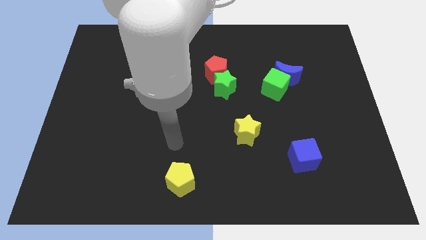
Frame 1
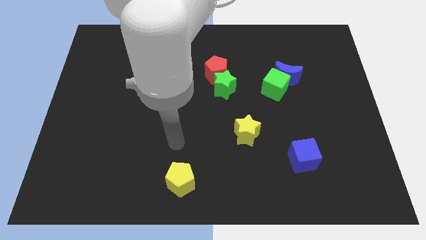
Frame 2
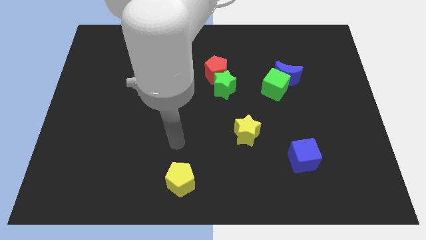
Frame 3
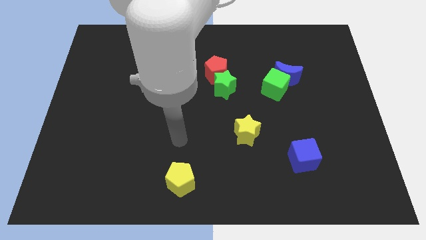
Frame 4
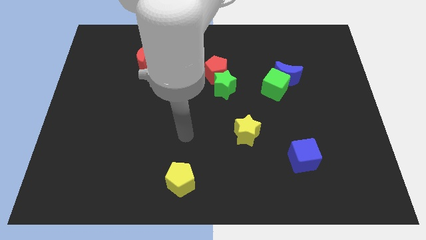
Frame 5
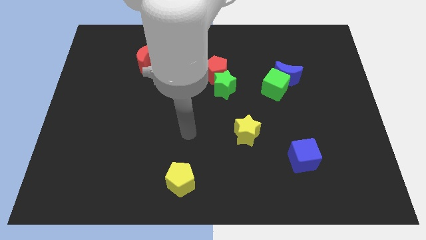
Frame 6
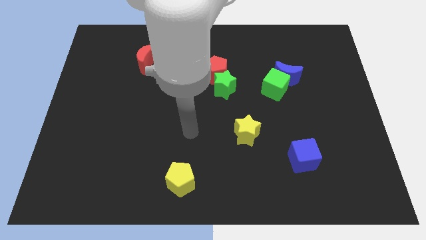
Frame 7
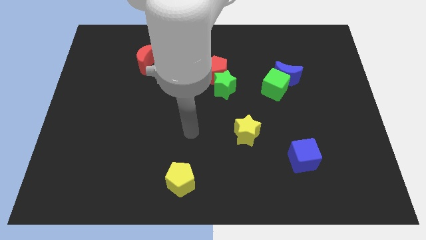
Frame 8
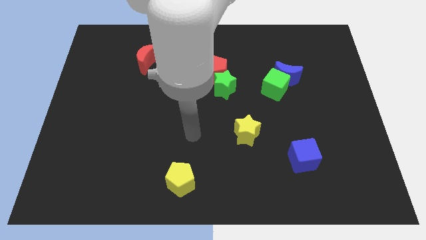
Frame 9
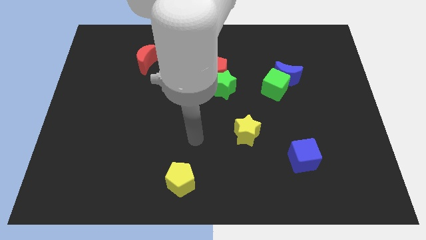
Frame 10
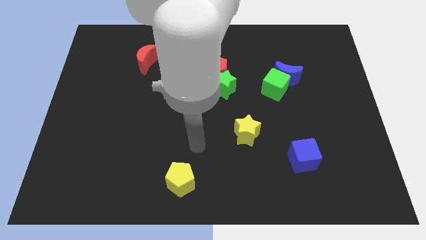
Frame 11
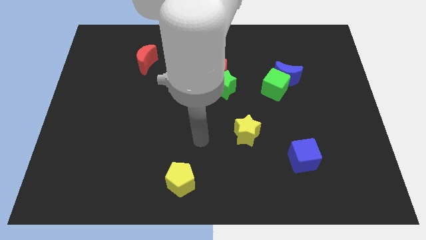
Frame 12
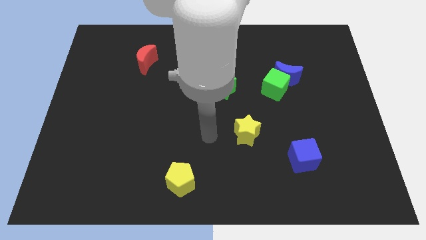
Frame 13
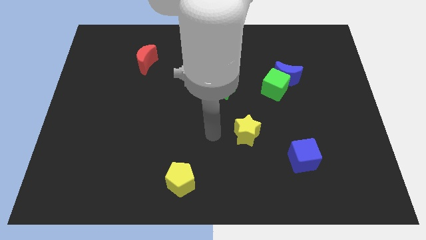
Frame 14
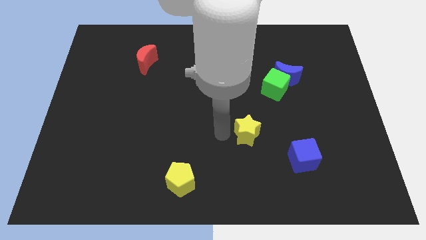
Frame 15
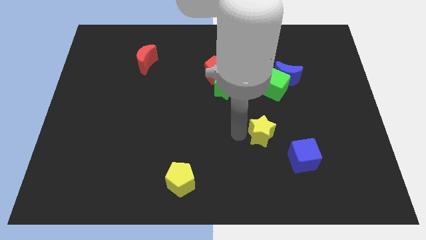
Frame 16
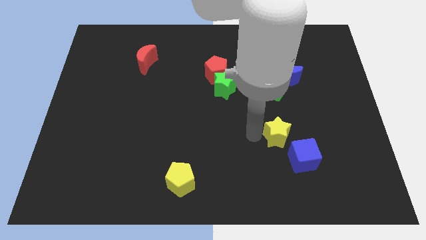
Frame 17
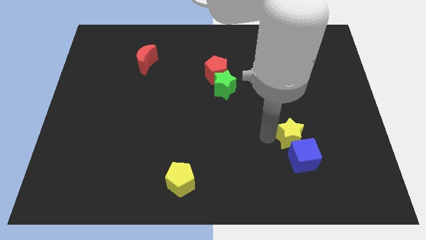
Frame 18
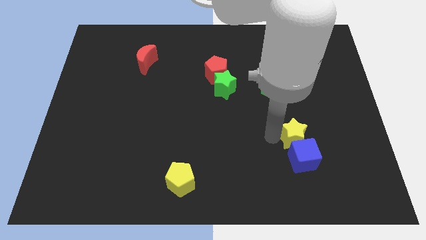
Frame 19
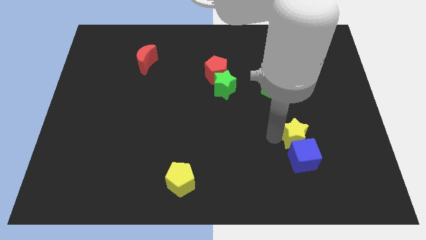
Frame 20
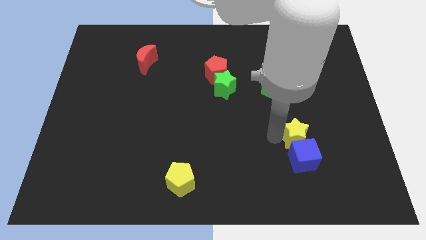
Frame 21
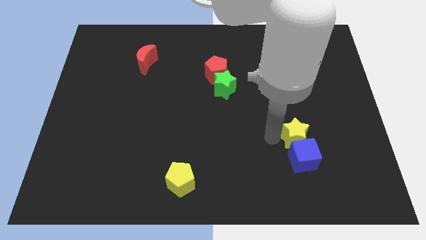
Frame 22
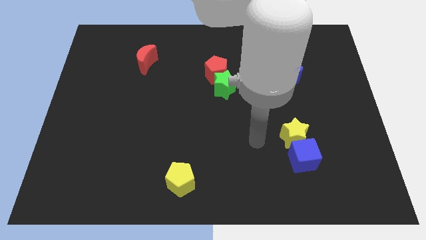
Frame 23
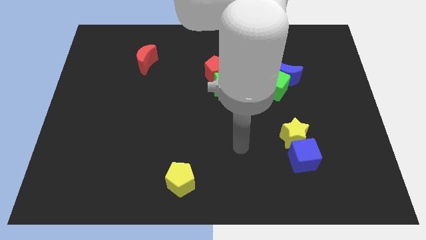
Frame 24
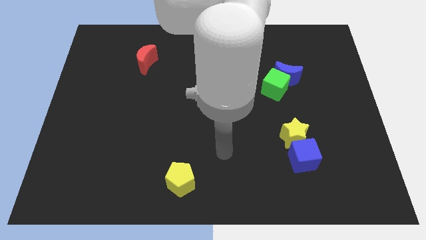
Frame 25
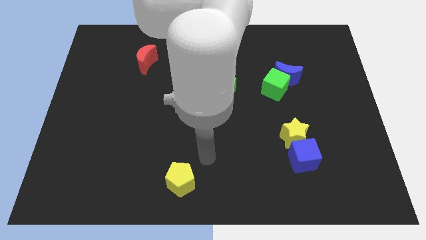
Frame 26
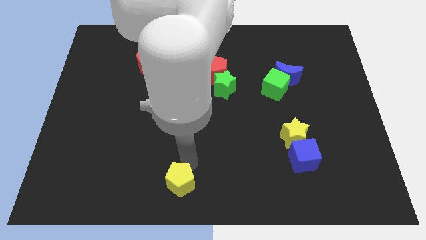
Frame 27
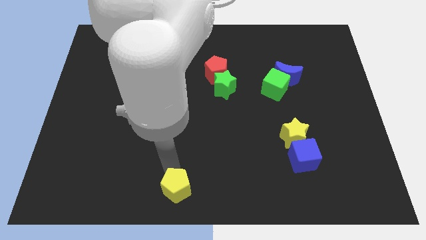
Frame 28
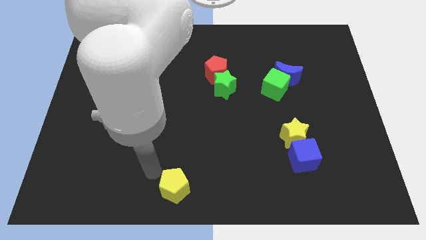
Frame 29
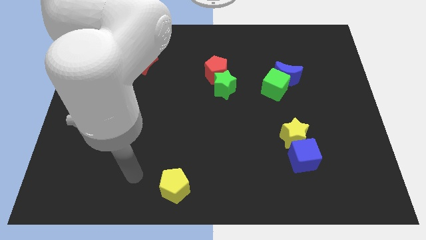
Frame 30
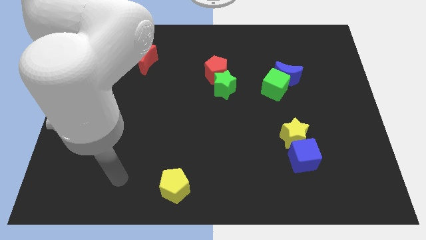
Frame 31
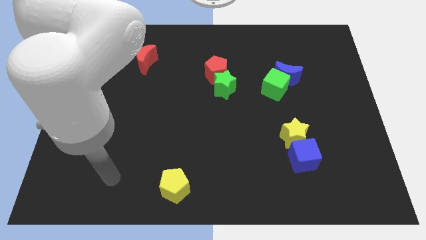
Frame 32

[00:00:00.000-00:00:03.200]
place yellow star above blue cube

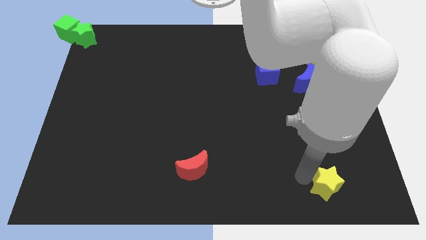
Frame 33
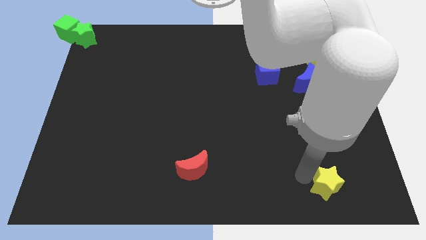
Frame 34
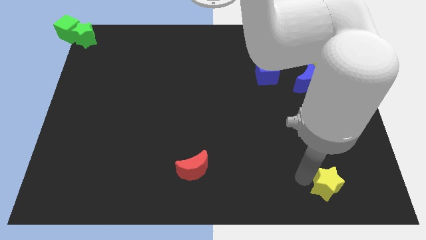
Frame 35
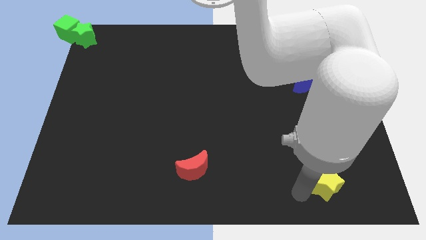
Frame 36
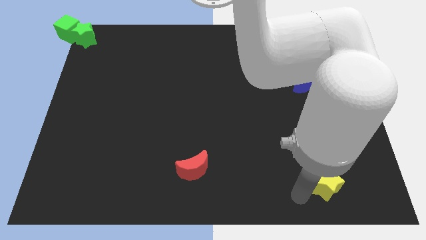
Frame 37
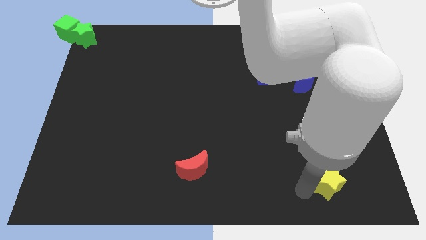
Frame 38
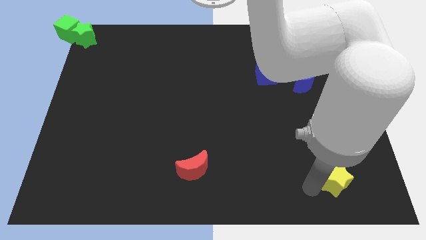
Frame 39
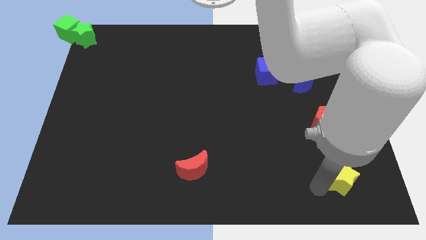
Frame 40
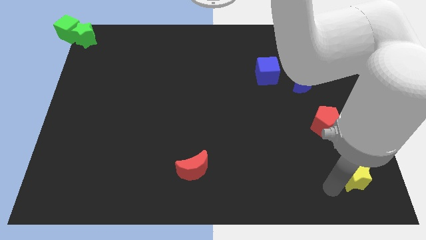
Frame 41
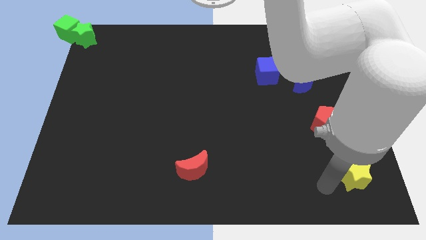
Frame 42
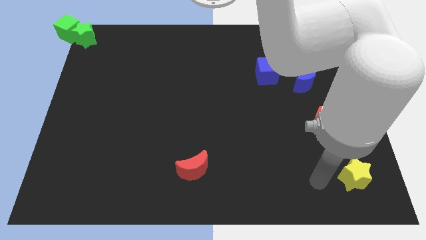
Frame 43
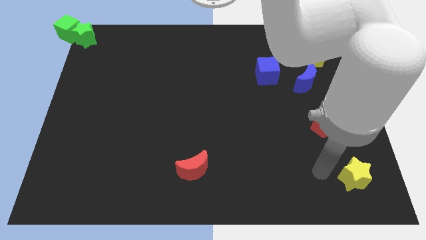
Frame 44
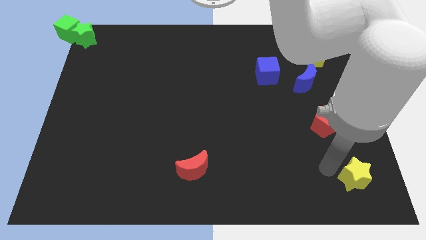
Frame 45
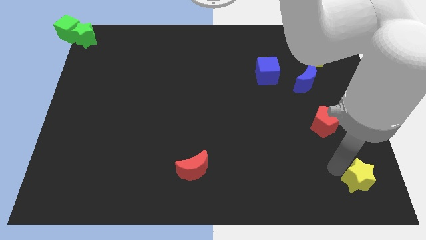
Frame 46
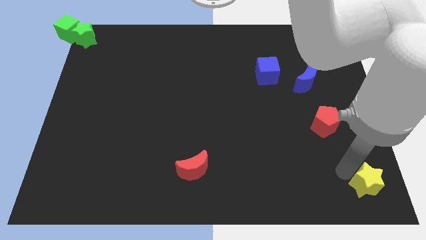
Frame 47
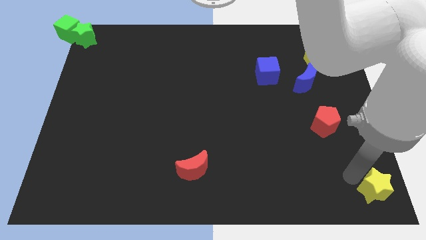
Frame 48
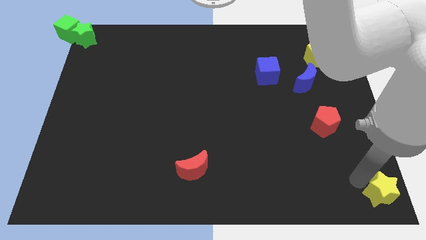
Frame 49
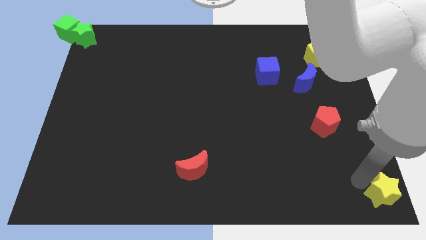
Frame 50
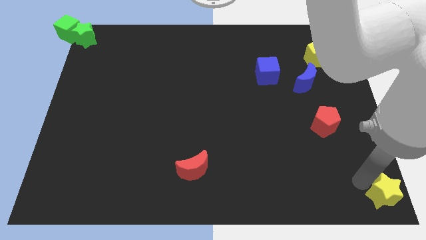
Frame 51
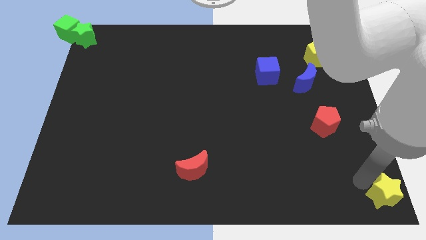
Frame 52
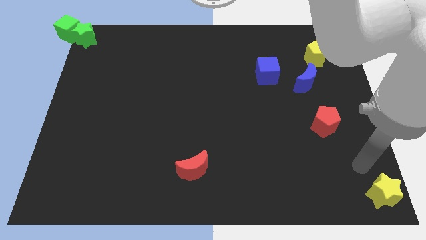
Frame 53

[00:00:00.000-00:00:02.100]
move the yellow star to the bottom right of the board

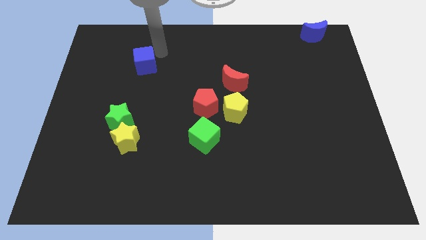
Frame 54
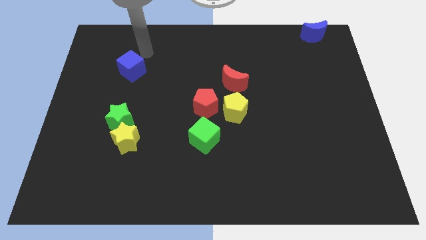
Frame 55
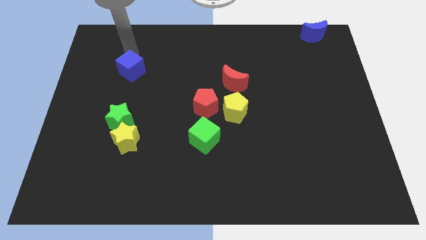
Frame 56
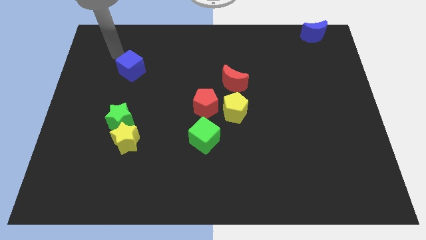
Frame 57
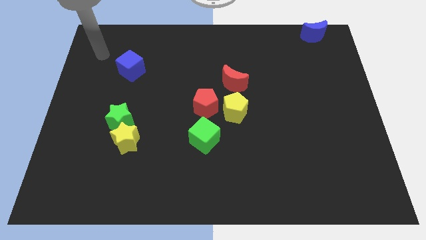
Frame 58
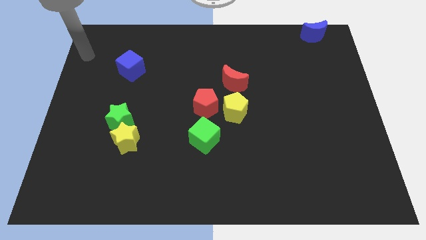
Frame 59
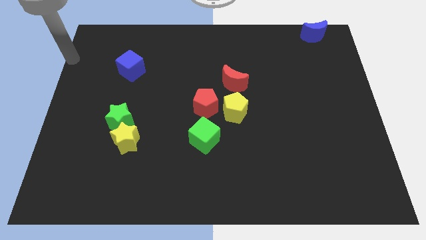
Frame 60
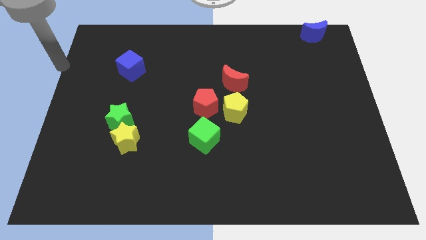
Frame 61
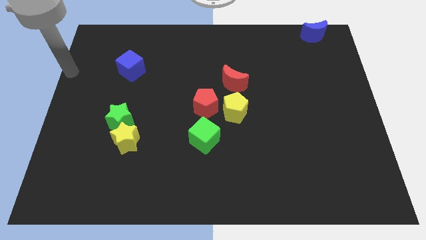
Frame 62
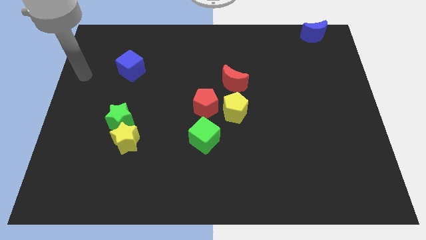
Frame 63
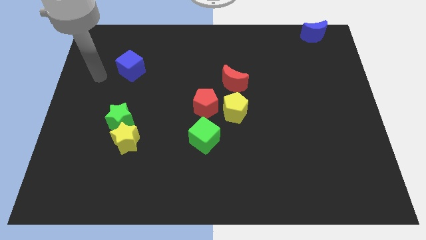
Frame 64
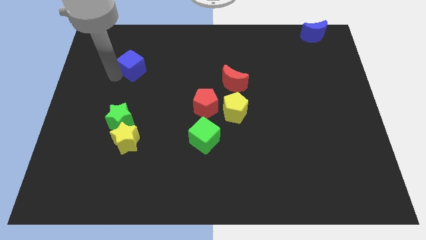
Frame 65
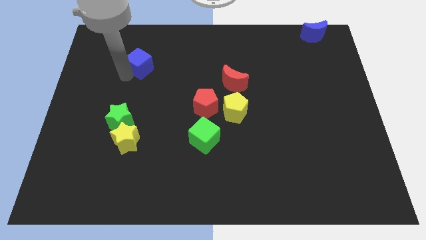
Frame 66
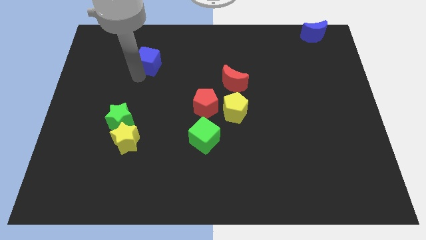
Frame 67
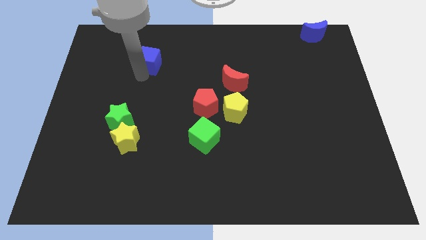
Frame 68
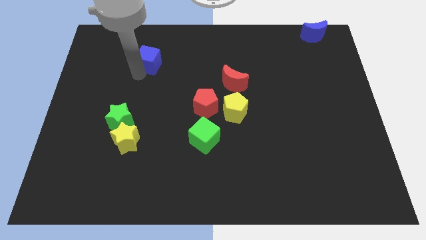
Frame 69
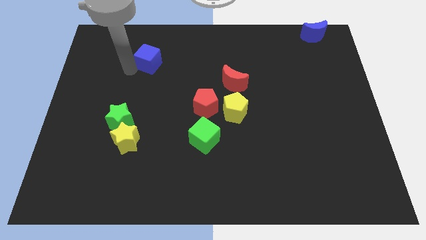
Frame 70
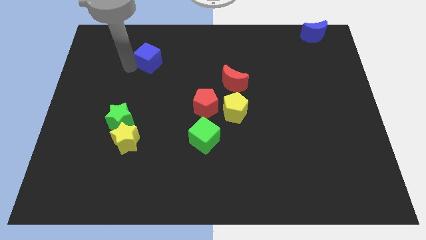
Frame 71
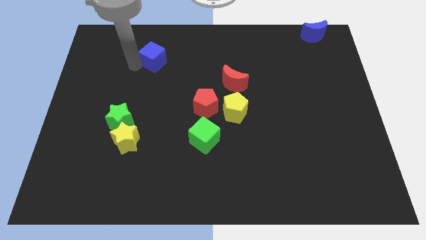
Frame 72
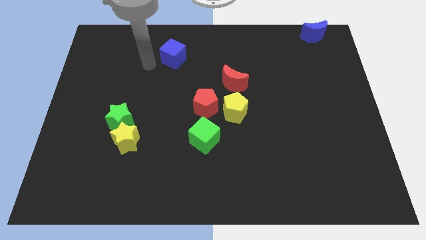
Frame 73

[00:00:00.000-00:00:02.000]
push the blue cube towards the top center of the board

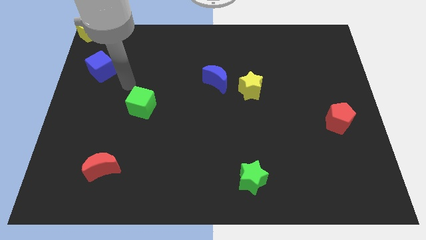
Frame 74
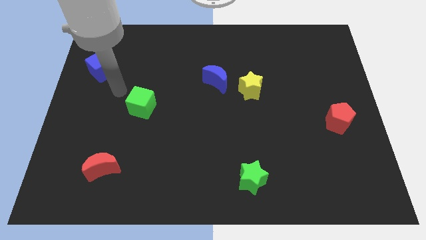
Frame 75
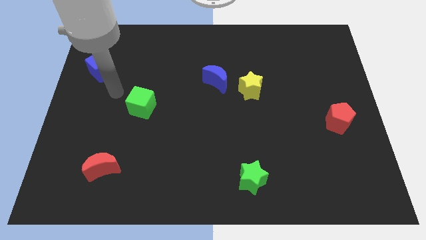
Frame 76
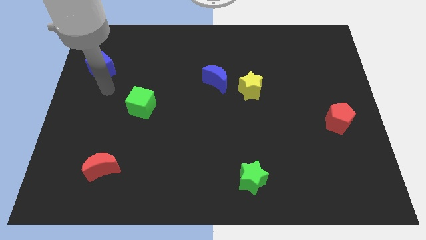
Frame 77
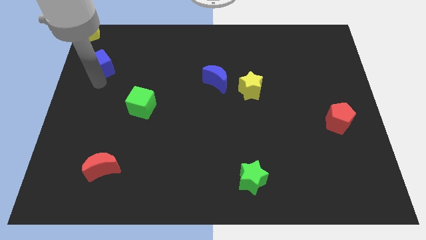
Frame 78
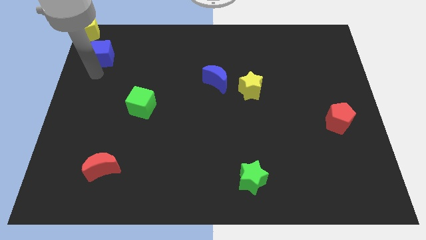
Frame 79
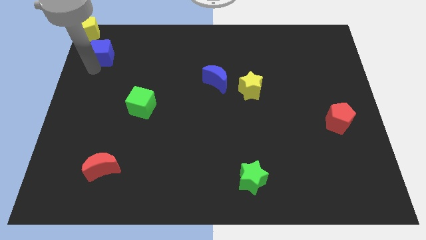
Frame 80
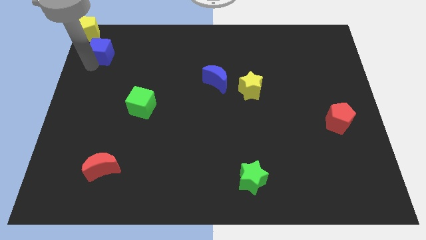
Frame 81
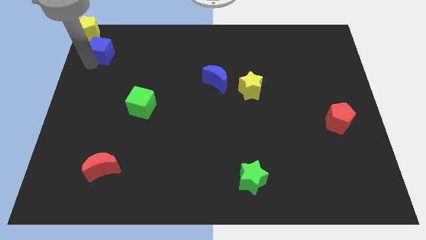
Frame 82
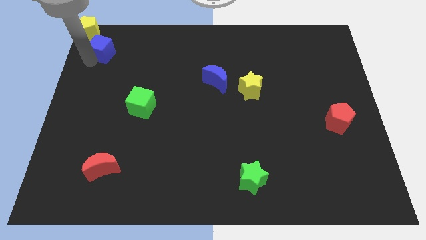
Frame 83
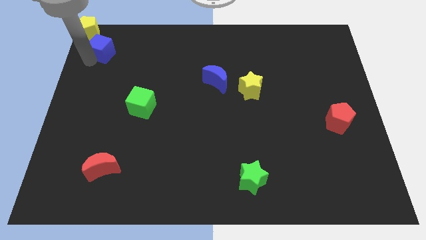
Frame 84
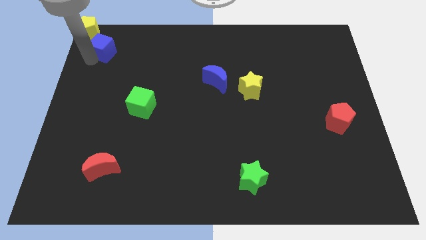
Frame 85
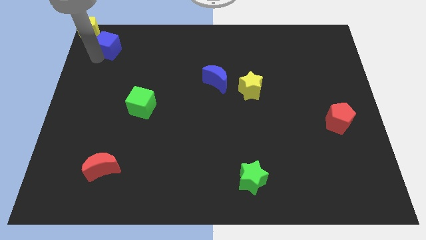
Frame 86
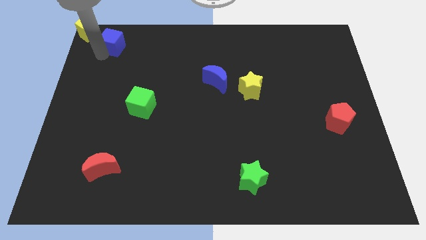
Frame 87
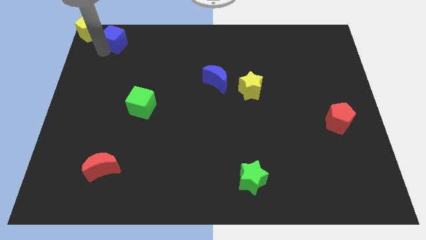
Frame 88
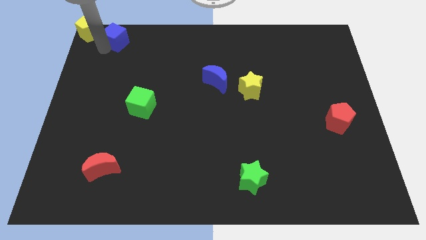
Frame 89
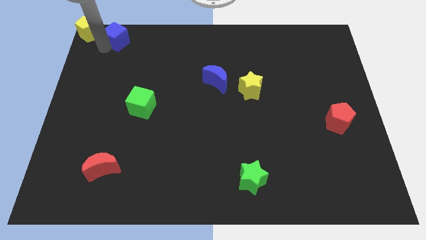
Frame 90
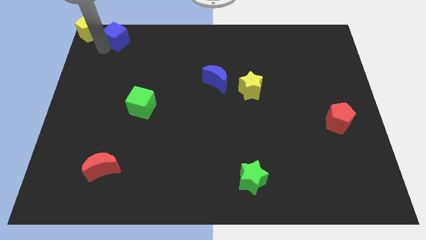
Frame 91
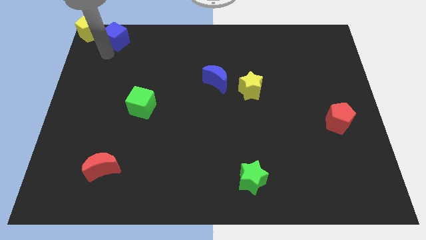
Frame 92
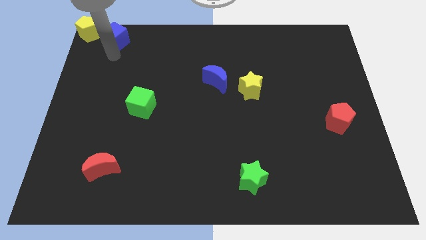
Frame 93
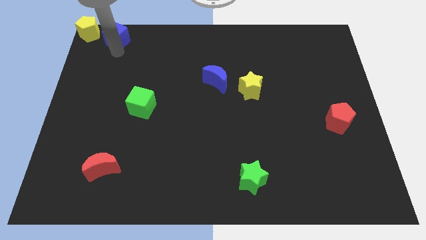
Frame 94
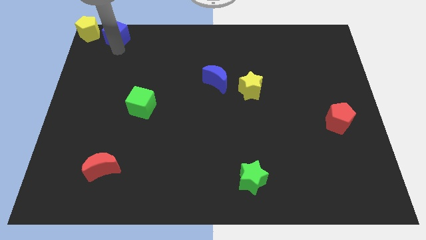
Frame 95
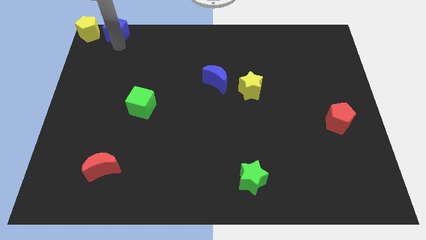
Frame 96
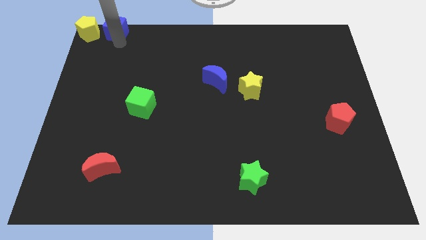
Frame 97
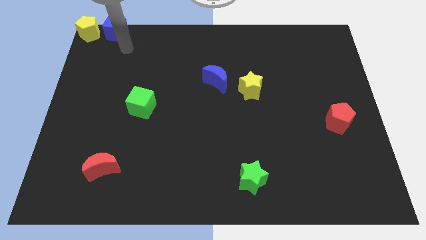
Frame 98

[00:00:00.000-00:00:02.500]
place the blue cube to the right side of the yellow pentagon
